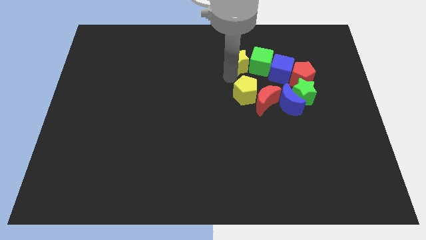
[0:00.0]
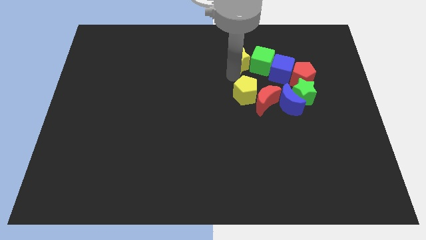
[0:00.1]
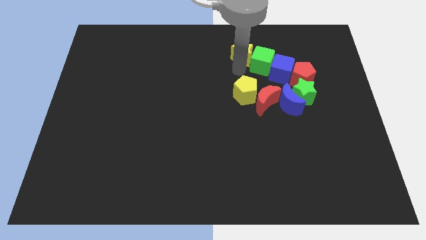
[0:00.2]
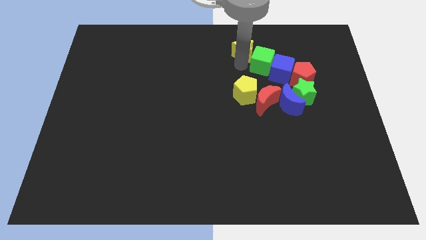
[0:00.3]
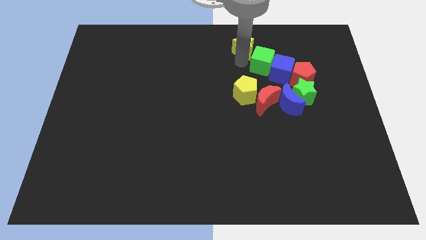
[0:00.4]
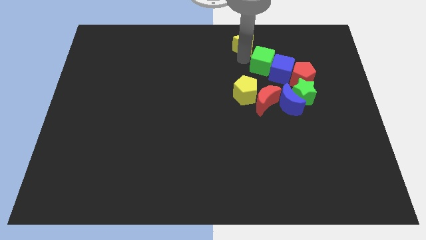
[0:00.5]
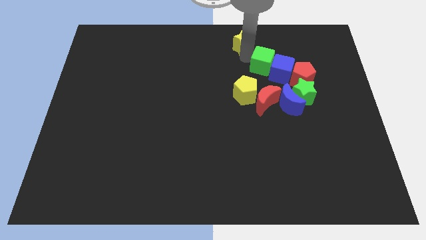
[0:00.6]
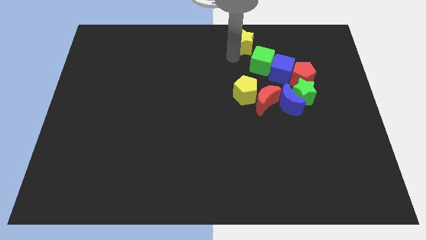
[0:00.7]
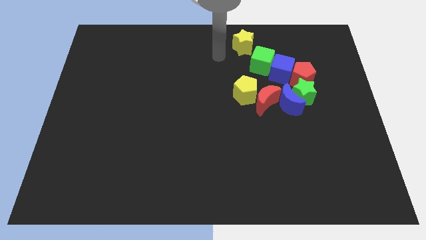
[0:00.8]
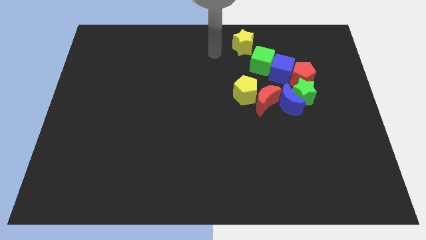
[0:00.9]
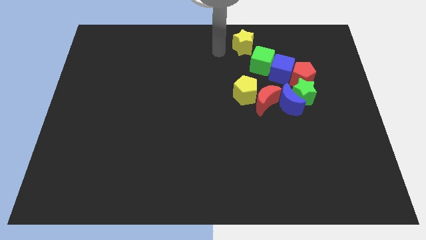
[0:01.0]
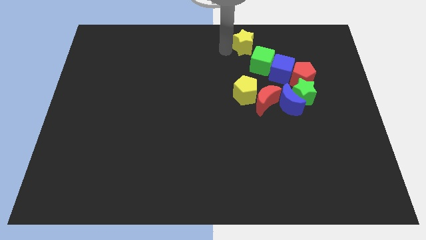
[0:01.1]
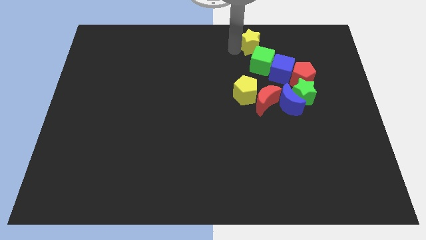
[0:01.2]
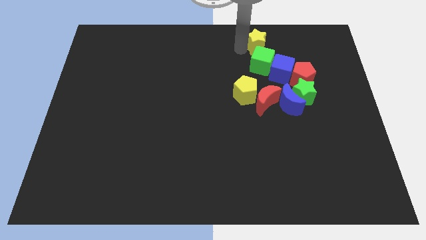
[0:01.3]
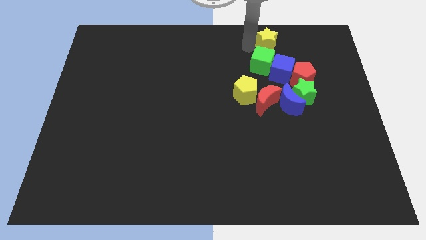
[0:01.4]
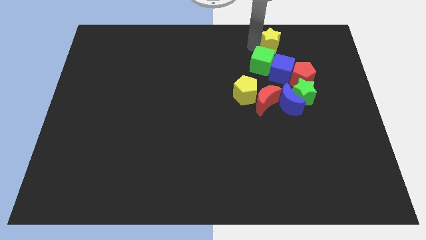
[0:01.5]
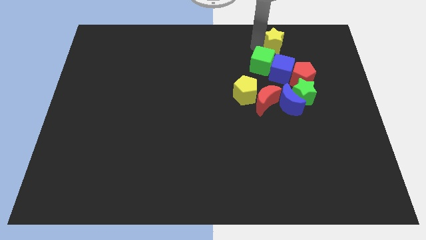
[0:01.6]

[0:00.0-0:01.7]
move the yellow star above the green cube

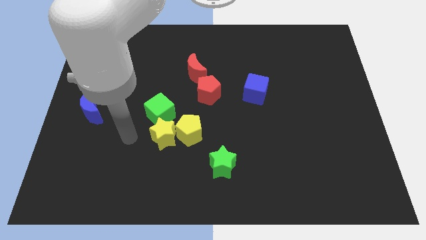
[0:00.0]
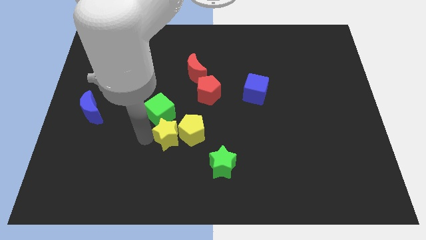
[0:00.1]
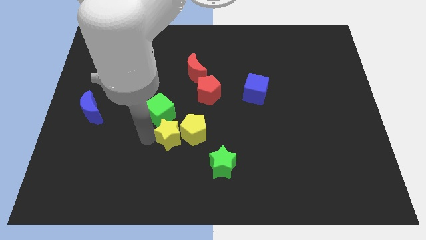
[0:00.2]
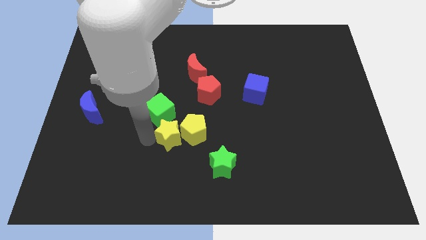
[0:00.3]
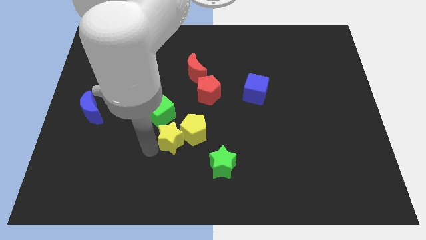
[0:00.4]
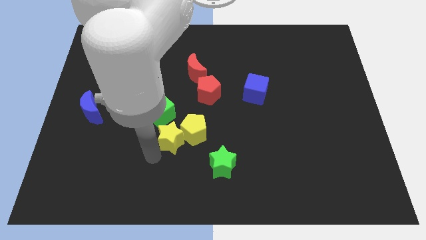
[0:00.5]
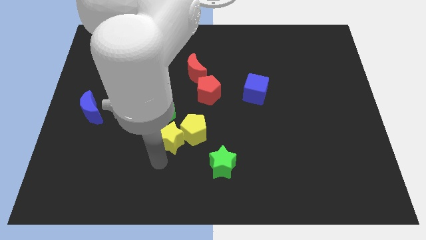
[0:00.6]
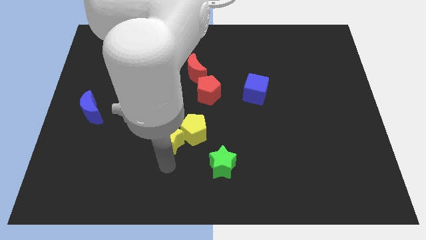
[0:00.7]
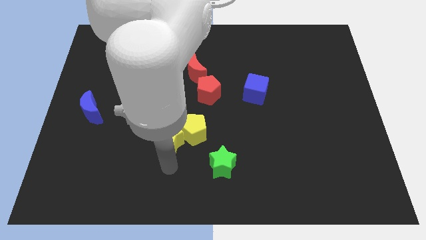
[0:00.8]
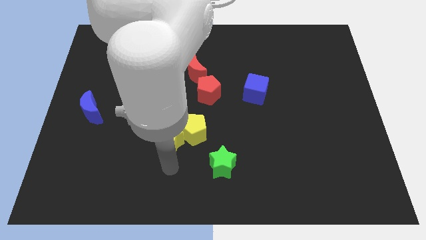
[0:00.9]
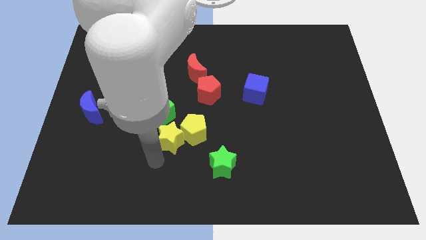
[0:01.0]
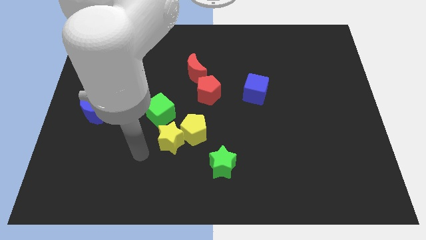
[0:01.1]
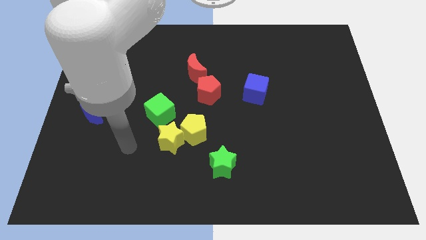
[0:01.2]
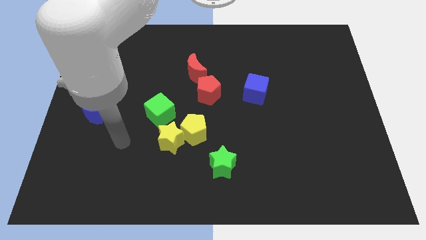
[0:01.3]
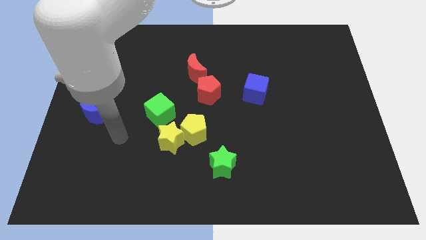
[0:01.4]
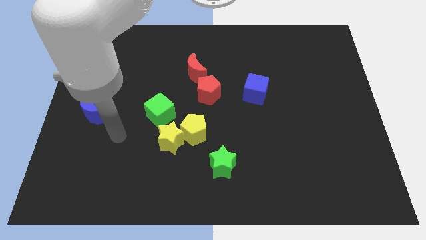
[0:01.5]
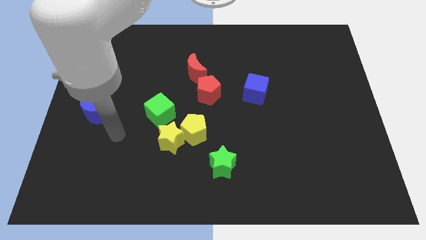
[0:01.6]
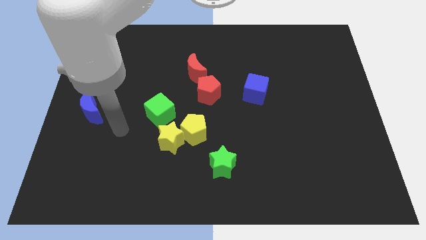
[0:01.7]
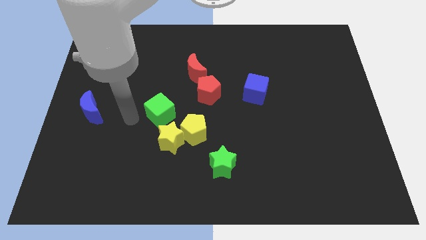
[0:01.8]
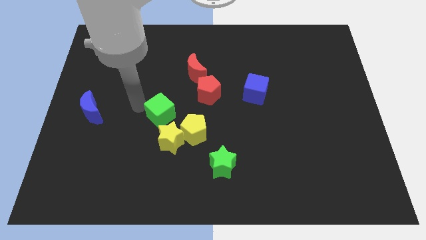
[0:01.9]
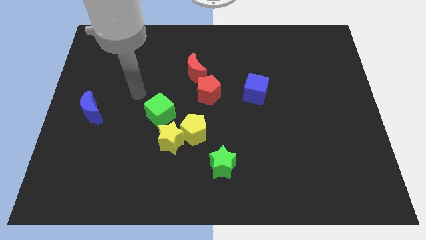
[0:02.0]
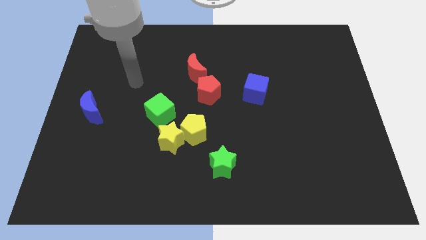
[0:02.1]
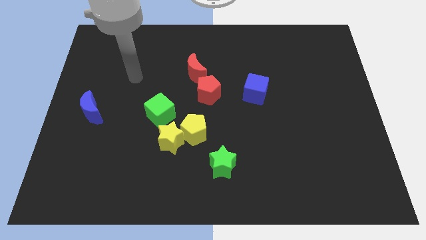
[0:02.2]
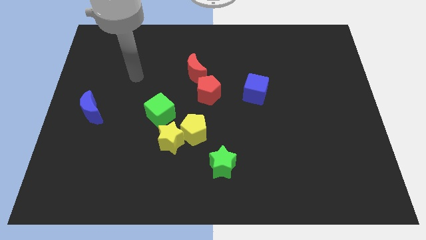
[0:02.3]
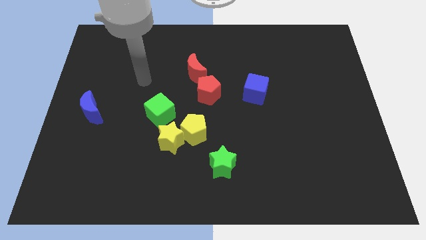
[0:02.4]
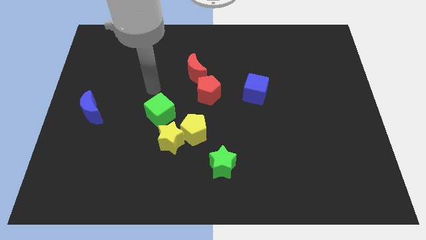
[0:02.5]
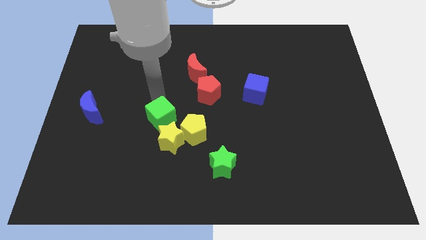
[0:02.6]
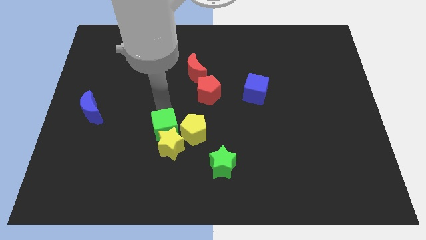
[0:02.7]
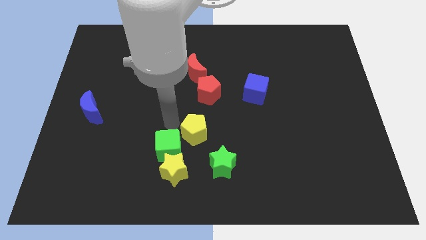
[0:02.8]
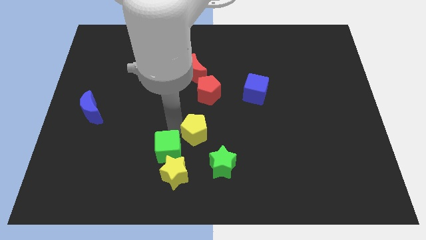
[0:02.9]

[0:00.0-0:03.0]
move the green cube and yellow star towards bottom center

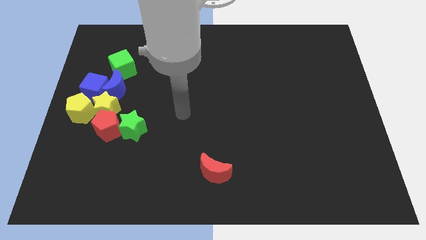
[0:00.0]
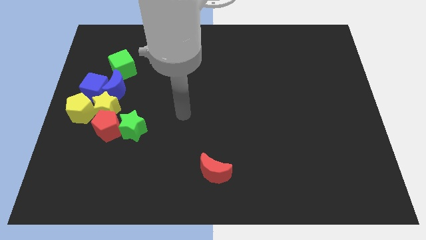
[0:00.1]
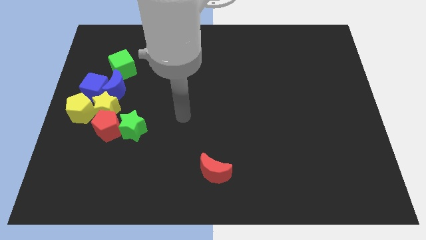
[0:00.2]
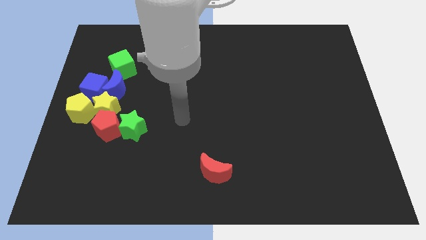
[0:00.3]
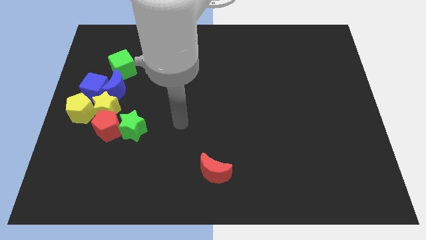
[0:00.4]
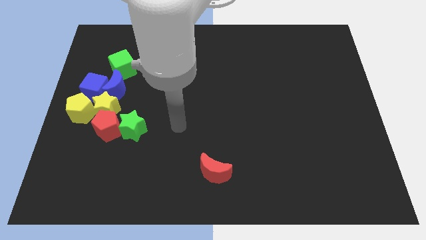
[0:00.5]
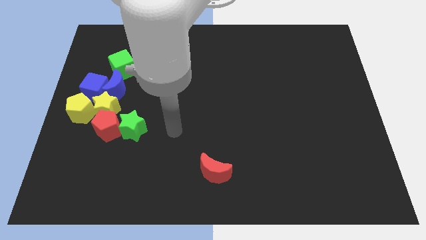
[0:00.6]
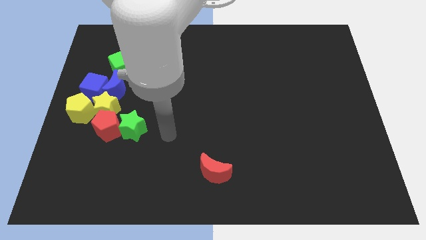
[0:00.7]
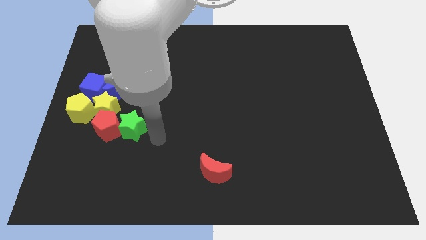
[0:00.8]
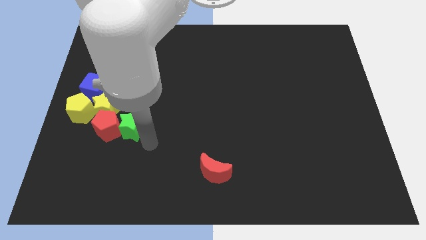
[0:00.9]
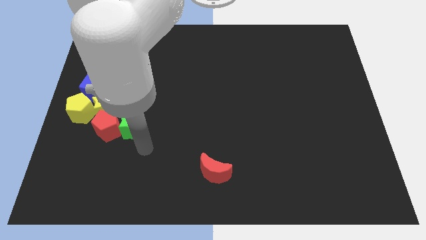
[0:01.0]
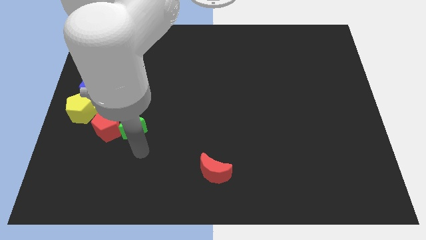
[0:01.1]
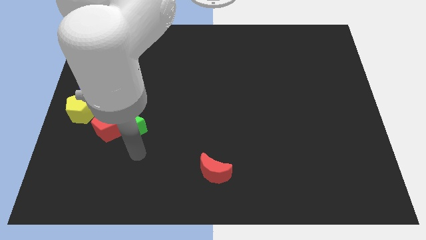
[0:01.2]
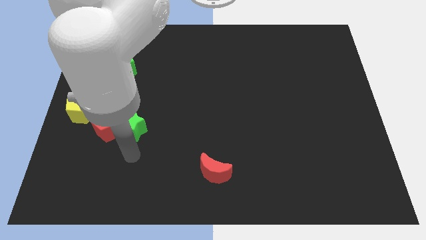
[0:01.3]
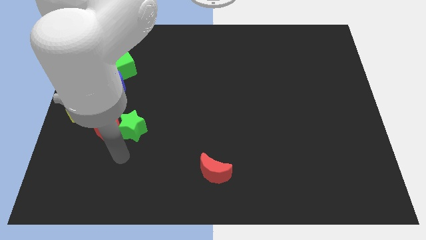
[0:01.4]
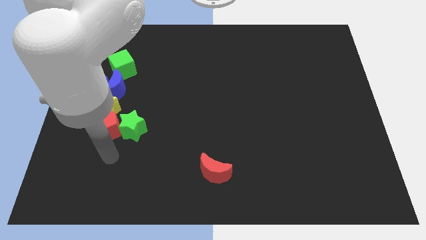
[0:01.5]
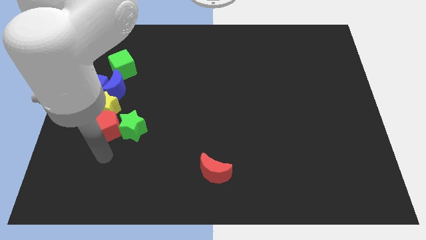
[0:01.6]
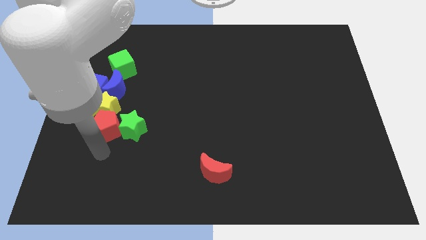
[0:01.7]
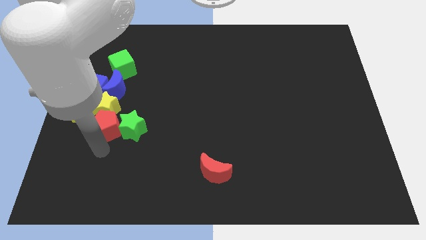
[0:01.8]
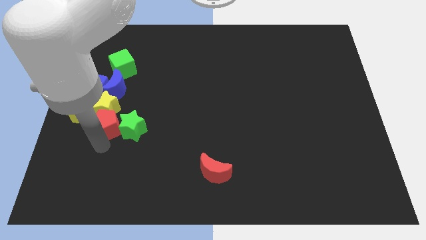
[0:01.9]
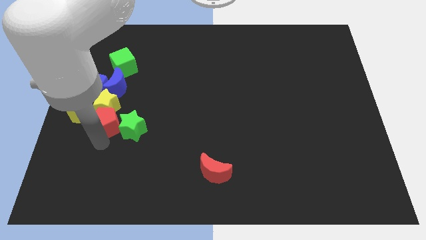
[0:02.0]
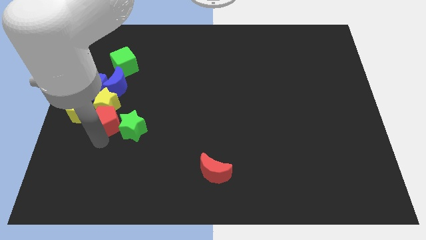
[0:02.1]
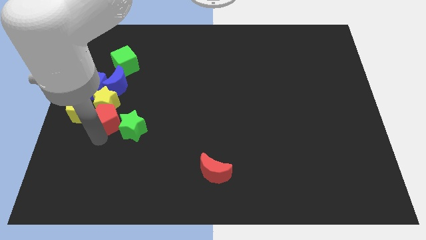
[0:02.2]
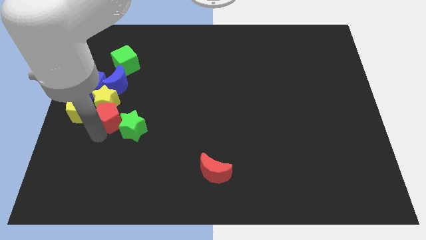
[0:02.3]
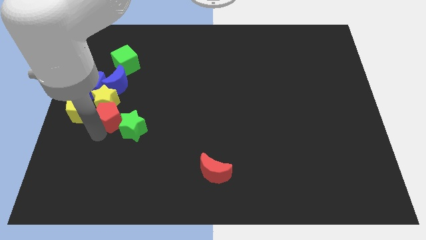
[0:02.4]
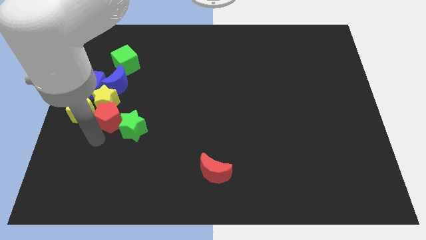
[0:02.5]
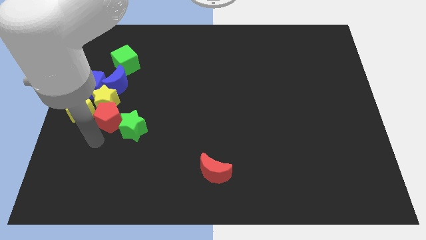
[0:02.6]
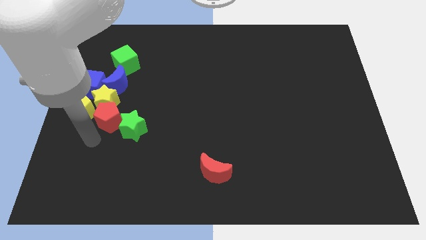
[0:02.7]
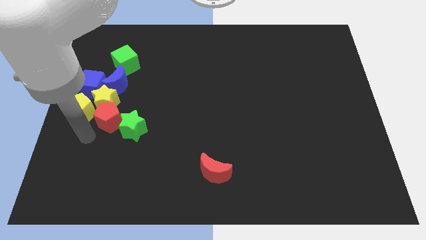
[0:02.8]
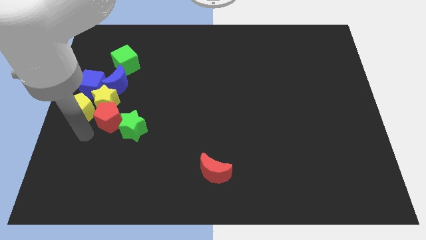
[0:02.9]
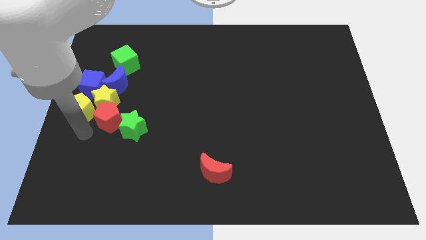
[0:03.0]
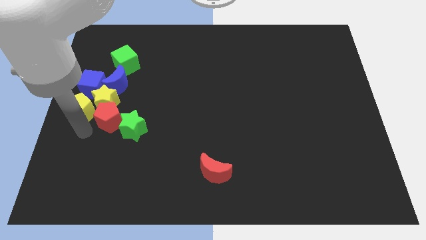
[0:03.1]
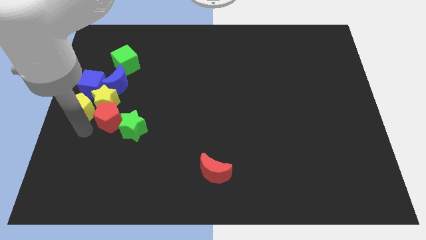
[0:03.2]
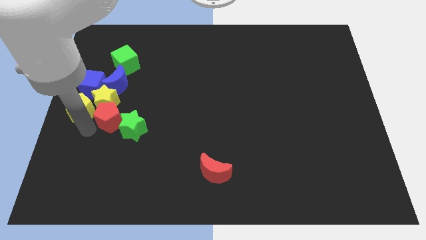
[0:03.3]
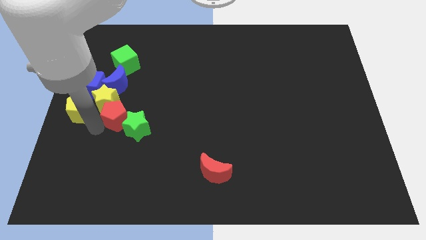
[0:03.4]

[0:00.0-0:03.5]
slightly push the red pentagon upwards

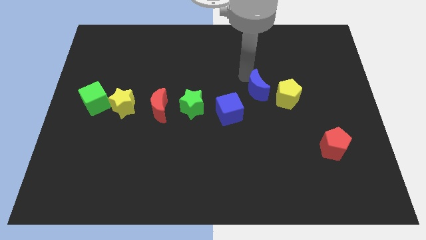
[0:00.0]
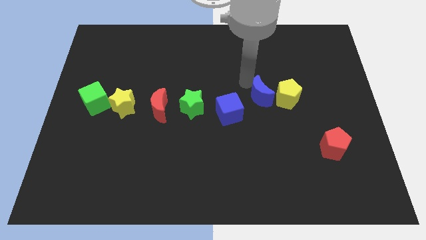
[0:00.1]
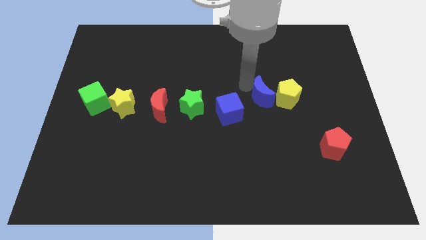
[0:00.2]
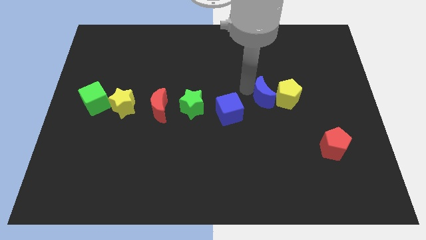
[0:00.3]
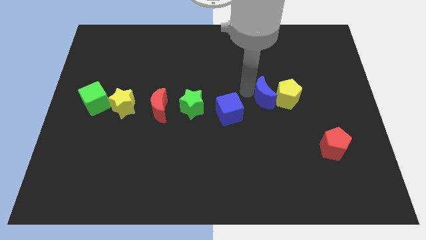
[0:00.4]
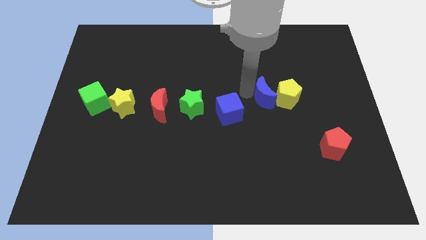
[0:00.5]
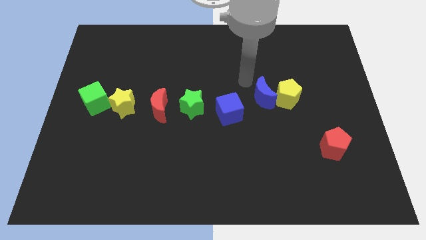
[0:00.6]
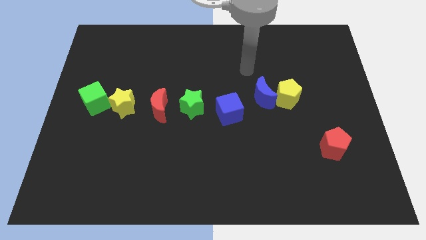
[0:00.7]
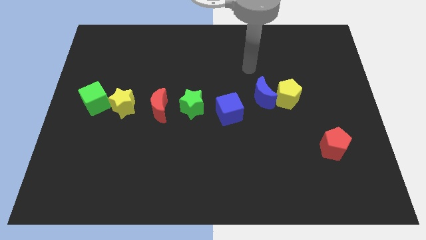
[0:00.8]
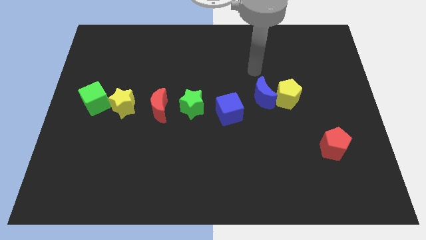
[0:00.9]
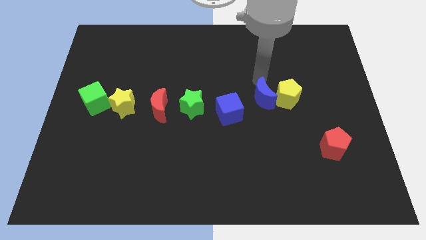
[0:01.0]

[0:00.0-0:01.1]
move the blue moon right to the blue cube
